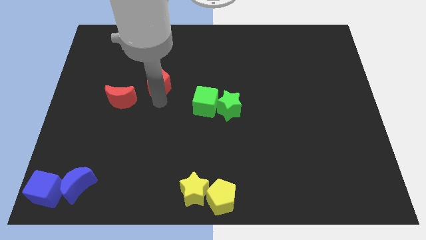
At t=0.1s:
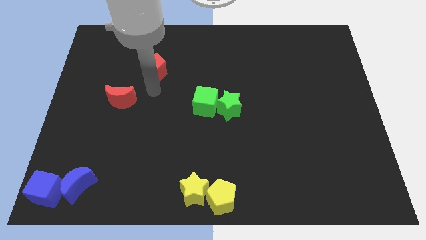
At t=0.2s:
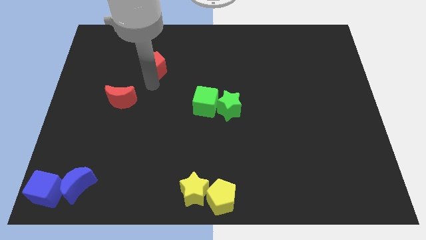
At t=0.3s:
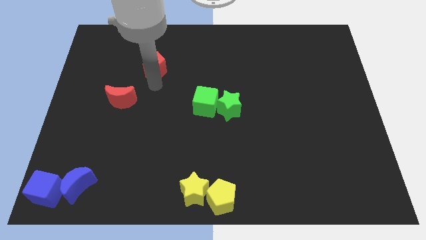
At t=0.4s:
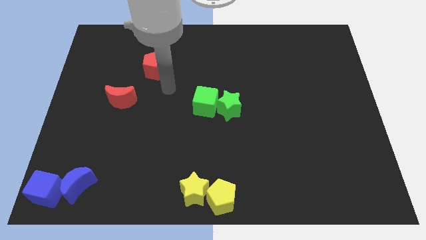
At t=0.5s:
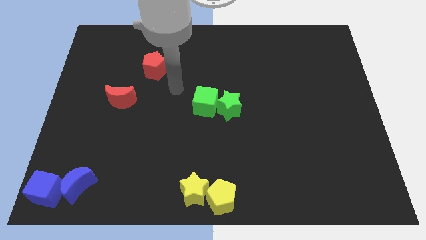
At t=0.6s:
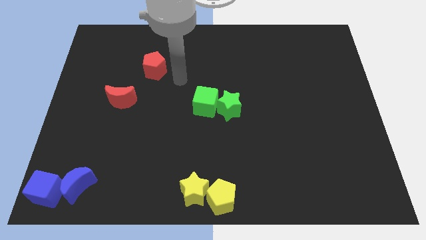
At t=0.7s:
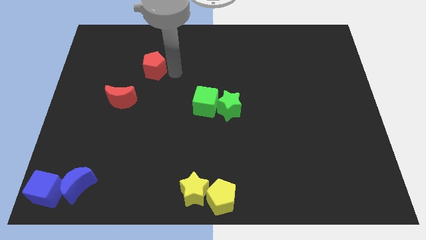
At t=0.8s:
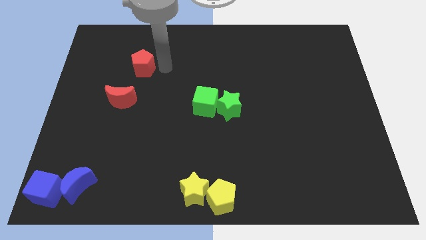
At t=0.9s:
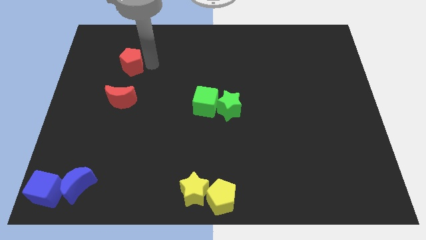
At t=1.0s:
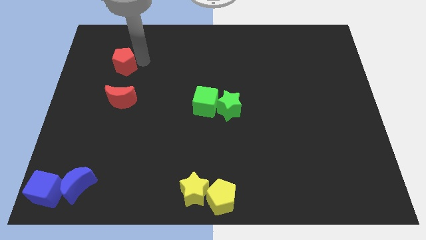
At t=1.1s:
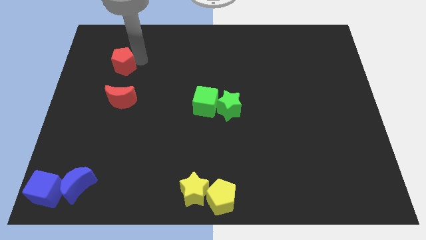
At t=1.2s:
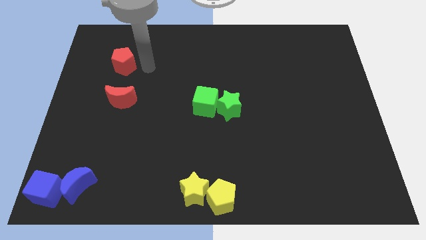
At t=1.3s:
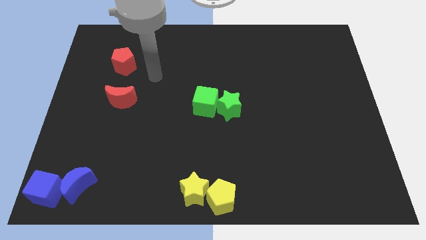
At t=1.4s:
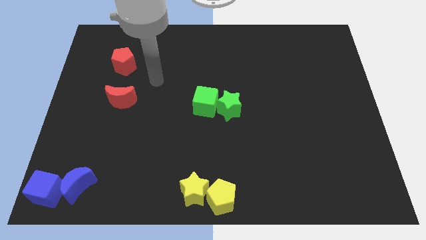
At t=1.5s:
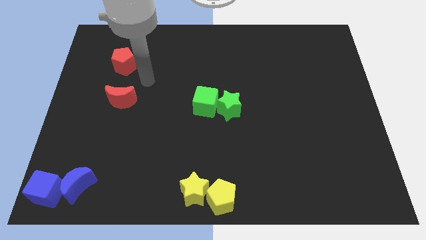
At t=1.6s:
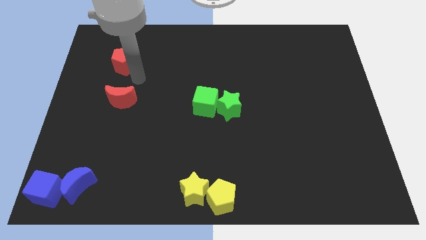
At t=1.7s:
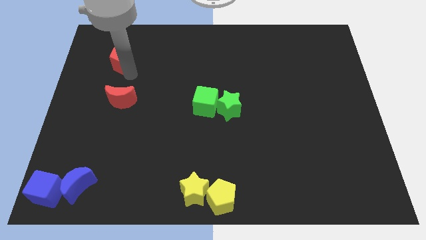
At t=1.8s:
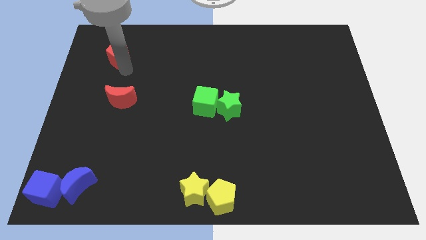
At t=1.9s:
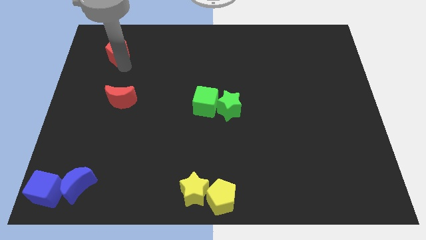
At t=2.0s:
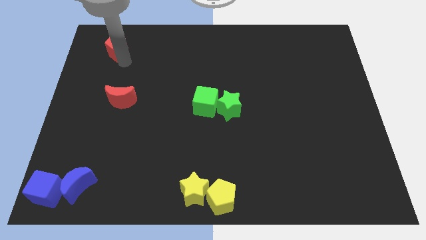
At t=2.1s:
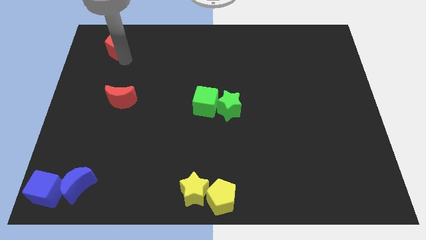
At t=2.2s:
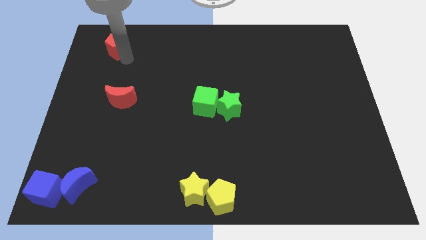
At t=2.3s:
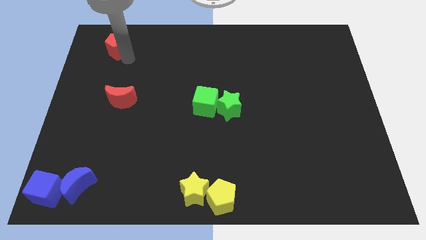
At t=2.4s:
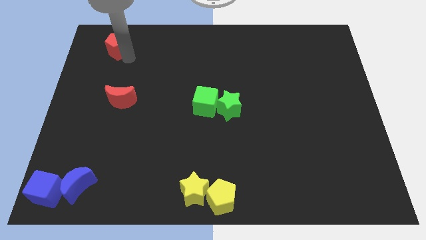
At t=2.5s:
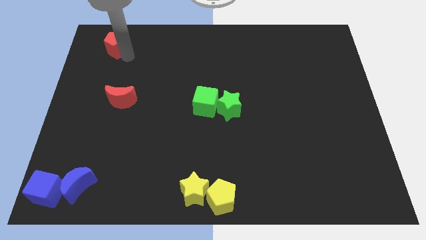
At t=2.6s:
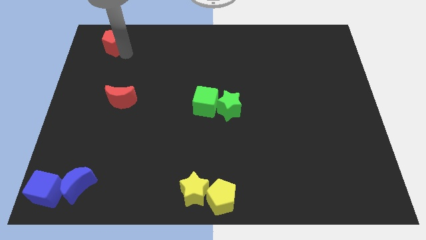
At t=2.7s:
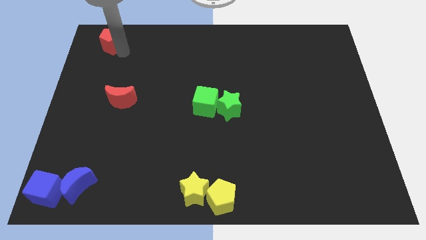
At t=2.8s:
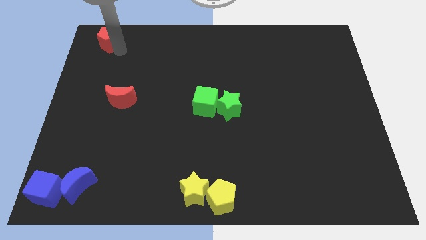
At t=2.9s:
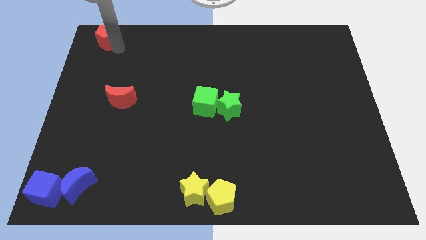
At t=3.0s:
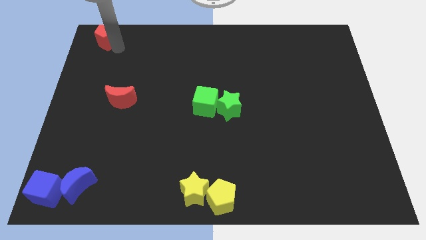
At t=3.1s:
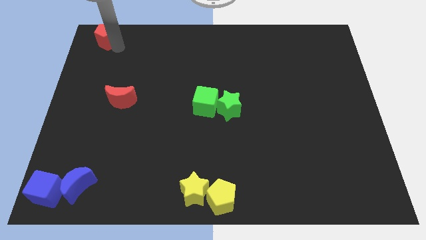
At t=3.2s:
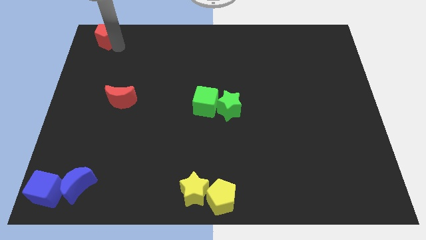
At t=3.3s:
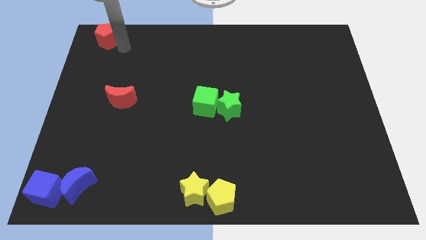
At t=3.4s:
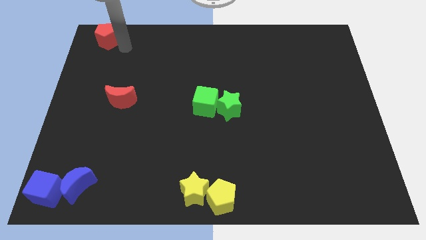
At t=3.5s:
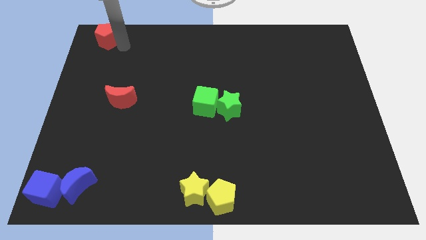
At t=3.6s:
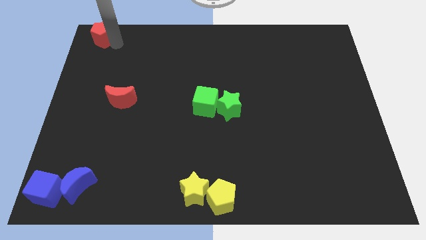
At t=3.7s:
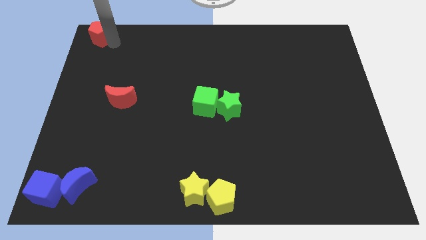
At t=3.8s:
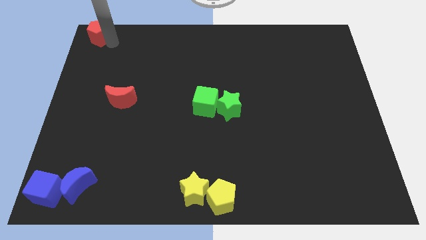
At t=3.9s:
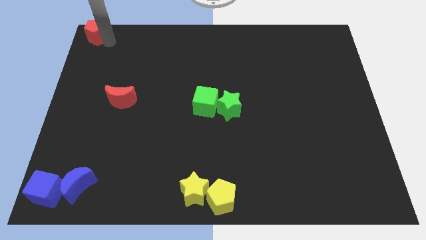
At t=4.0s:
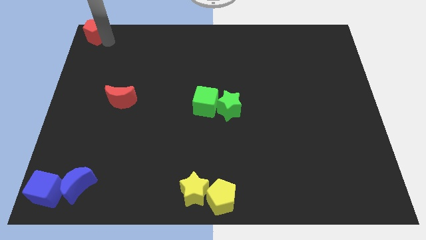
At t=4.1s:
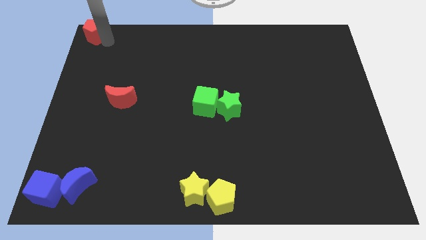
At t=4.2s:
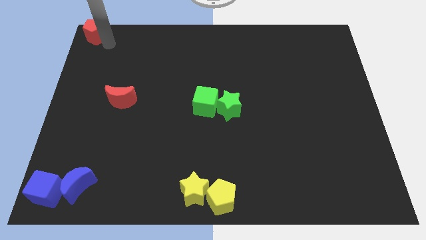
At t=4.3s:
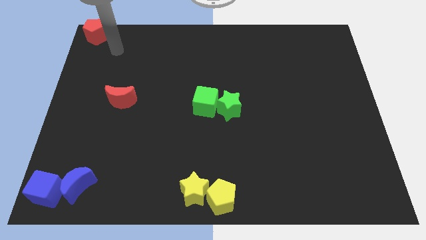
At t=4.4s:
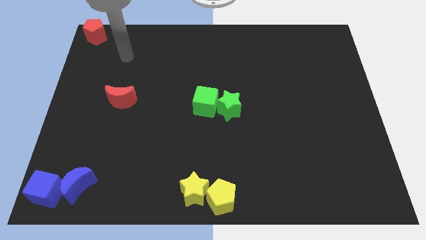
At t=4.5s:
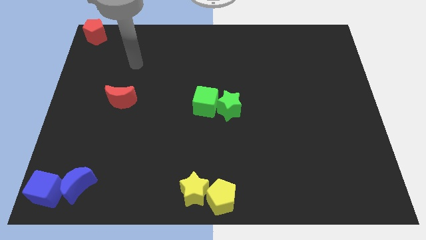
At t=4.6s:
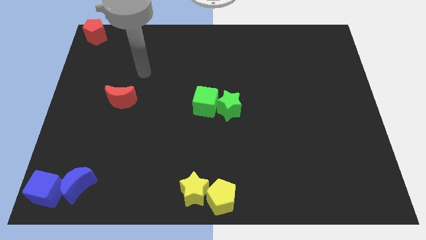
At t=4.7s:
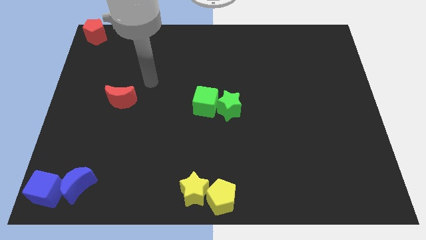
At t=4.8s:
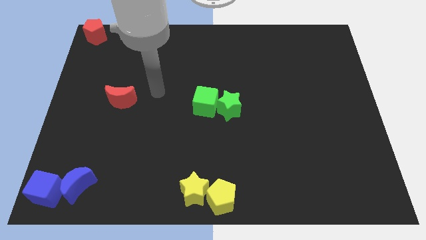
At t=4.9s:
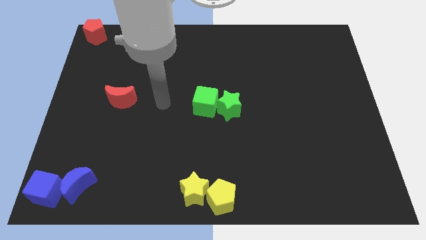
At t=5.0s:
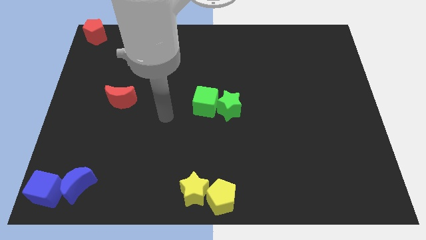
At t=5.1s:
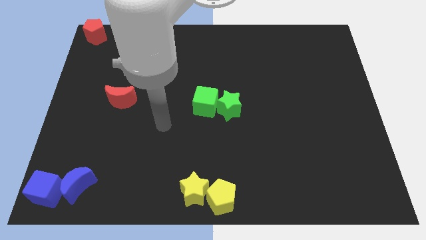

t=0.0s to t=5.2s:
push the red pentagon to the top left corner of the board

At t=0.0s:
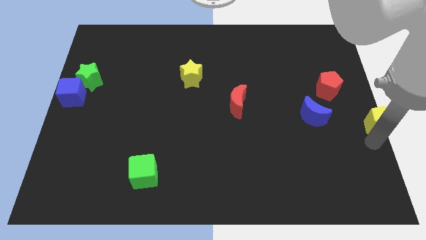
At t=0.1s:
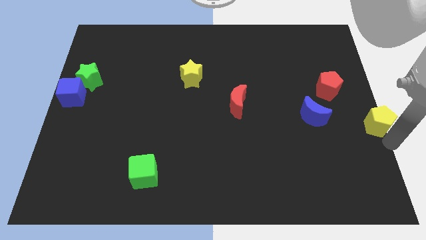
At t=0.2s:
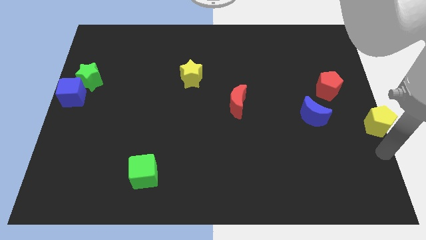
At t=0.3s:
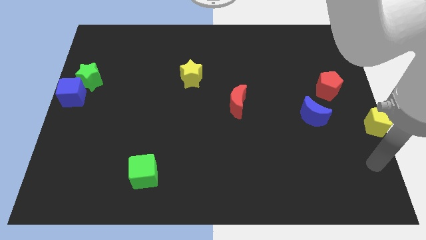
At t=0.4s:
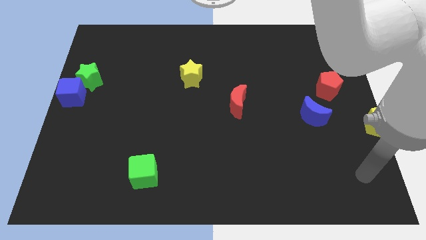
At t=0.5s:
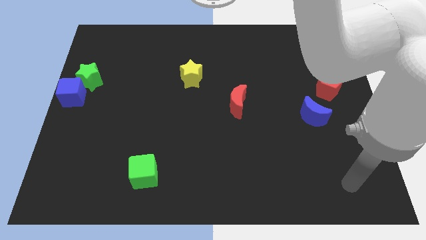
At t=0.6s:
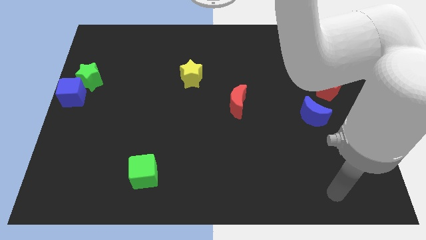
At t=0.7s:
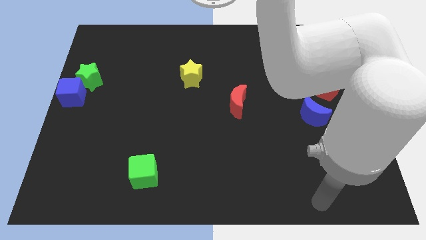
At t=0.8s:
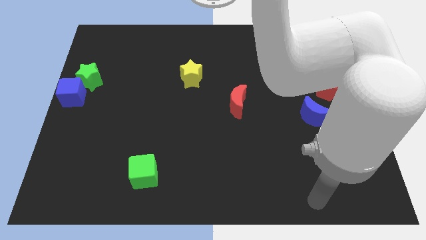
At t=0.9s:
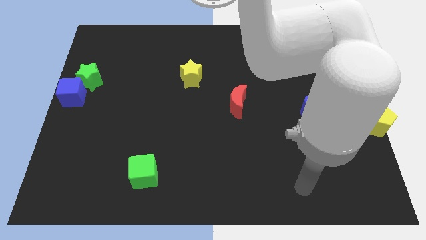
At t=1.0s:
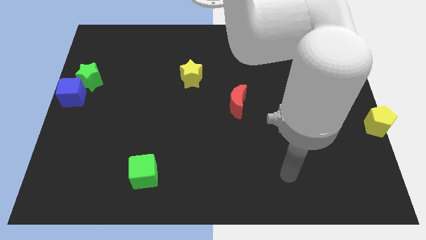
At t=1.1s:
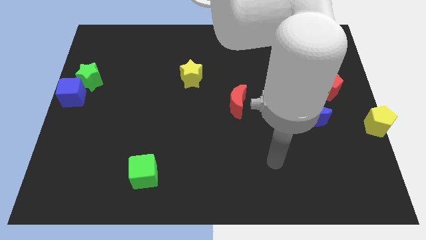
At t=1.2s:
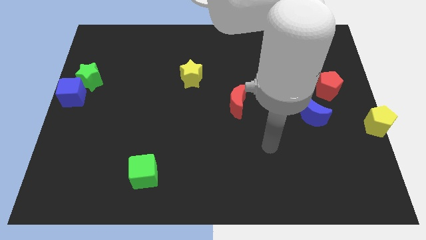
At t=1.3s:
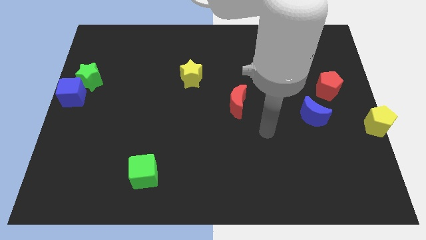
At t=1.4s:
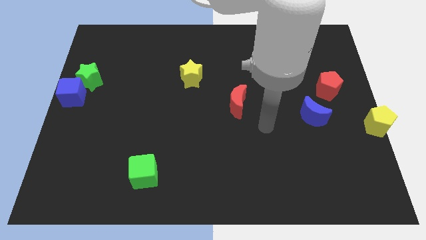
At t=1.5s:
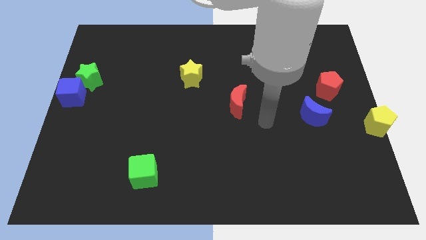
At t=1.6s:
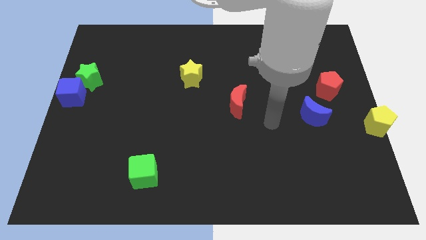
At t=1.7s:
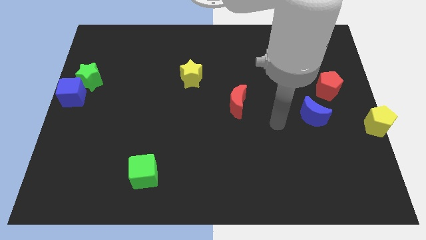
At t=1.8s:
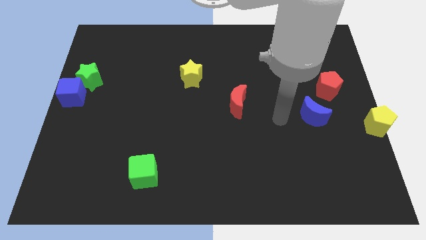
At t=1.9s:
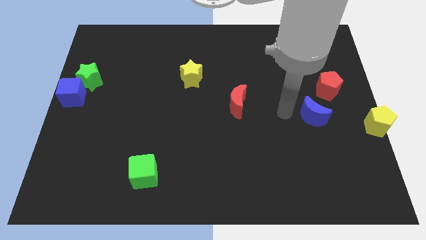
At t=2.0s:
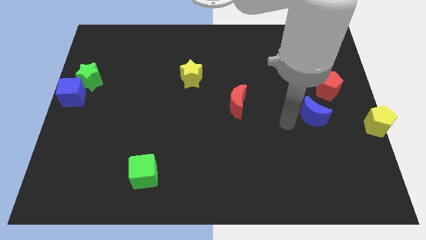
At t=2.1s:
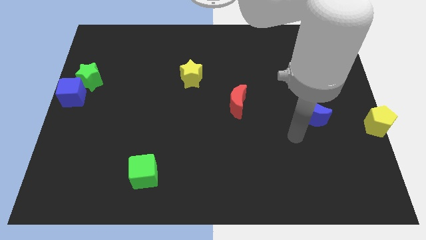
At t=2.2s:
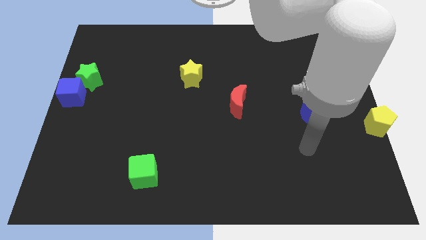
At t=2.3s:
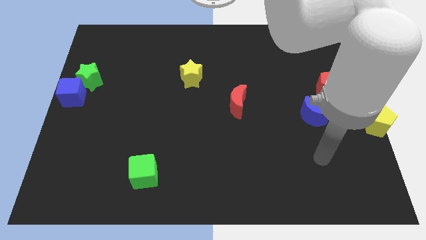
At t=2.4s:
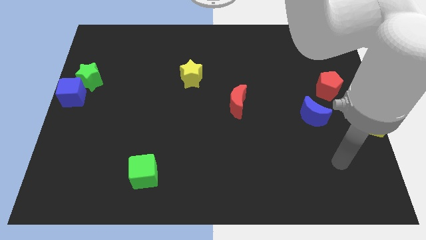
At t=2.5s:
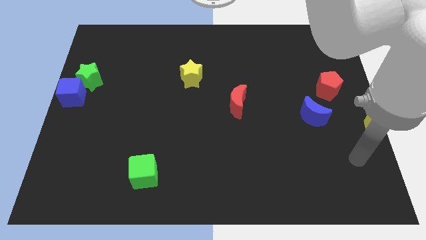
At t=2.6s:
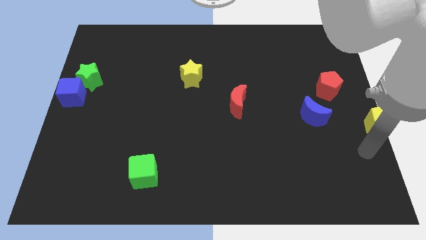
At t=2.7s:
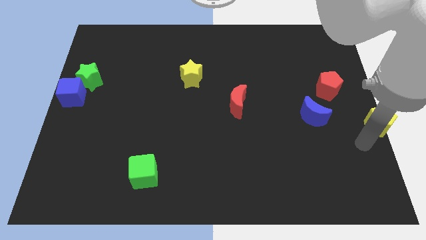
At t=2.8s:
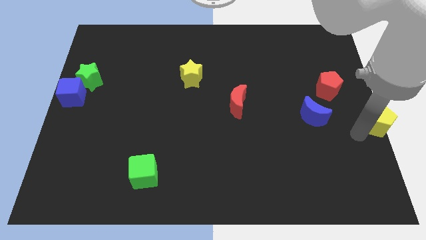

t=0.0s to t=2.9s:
move your arm towards center right

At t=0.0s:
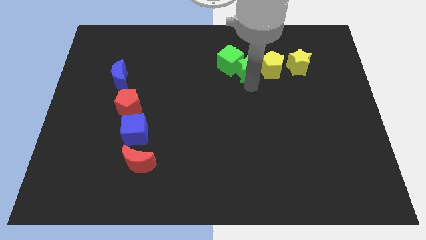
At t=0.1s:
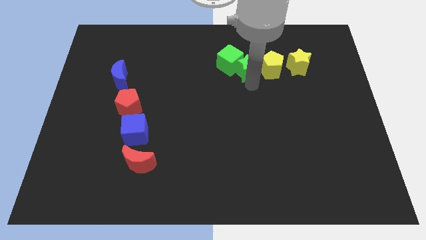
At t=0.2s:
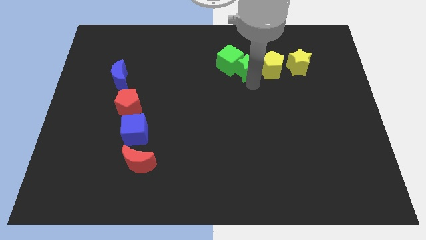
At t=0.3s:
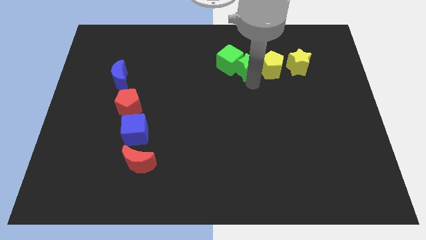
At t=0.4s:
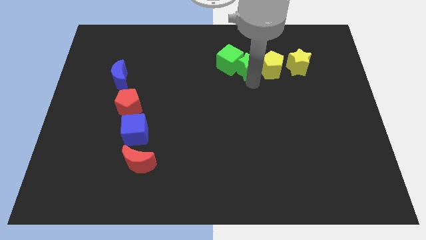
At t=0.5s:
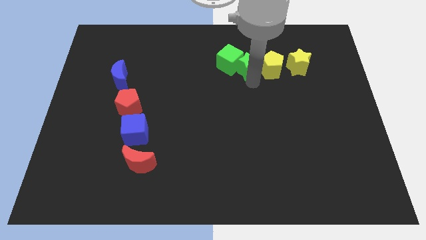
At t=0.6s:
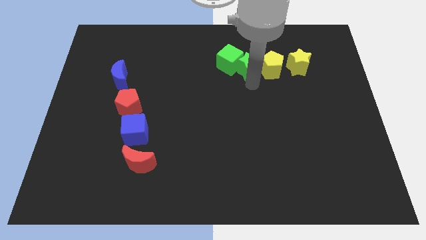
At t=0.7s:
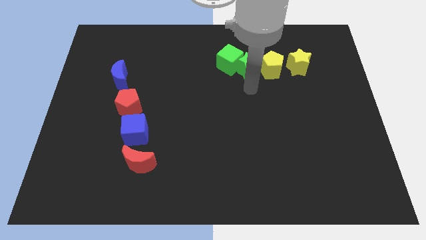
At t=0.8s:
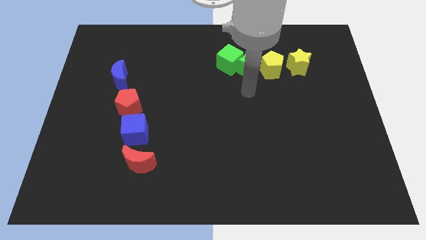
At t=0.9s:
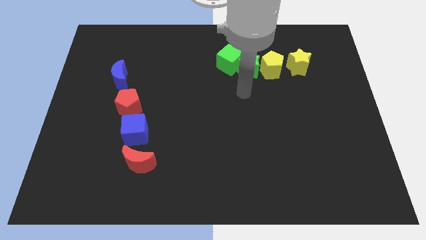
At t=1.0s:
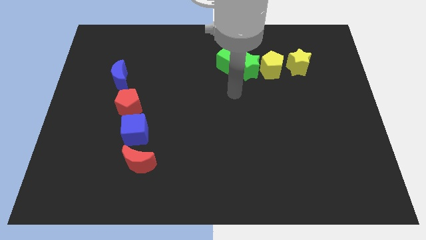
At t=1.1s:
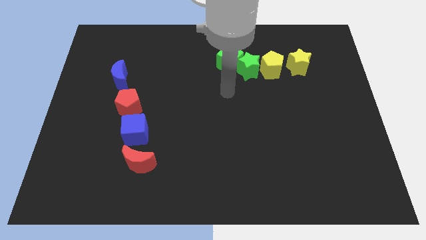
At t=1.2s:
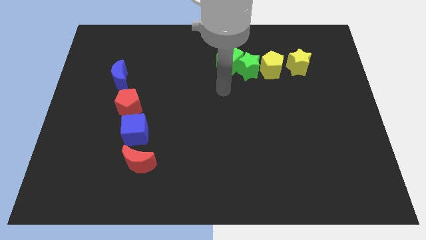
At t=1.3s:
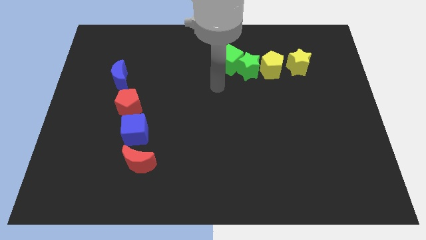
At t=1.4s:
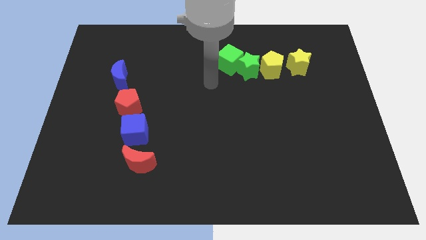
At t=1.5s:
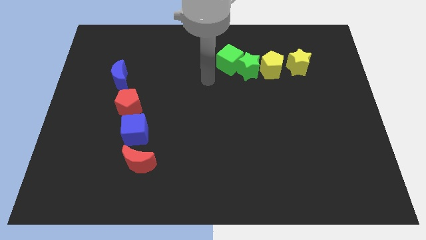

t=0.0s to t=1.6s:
move the green star to the left side of the yellow pentagon
